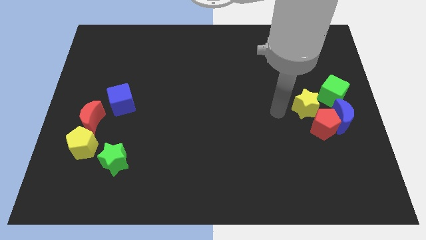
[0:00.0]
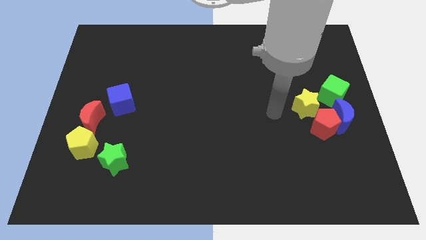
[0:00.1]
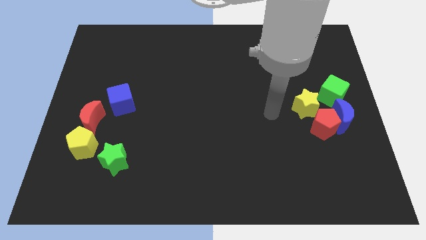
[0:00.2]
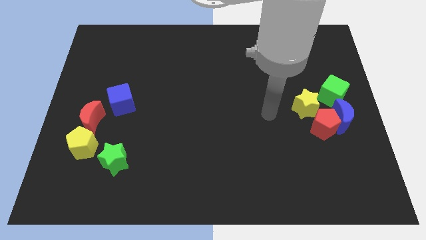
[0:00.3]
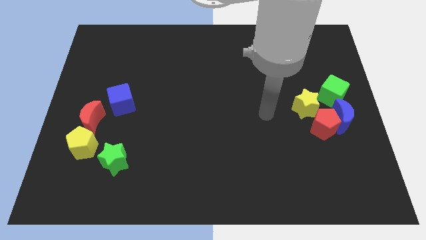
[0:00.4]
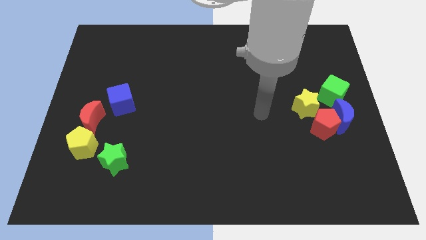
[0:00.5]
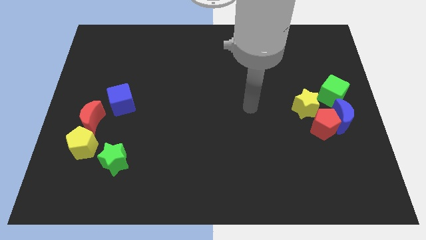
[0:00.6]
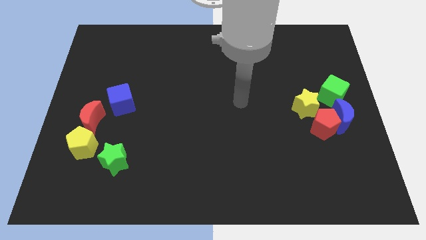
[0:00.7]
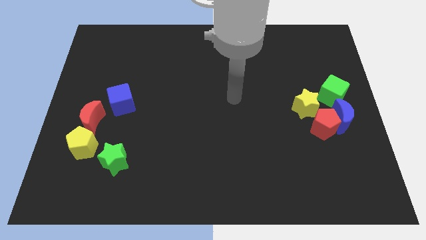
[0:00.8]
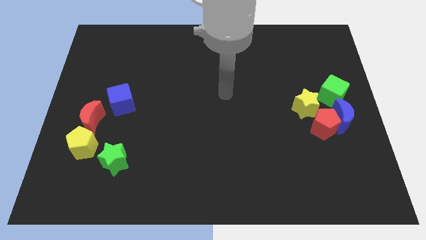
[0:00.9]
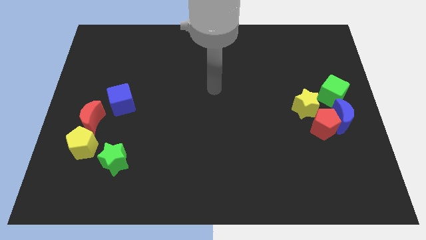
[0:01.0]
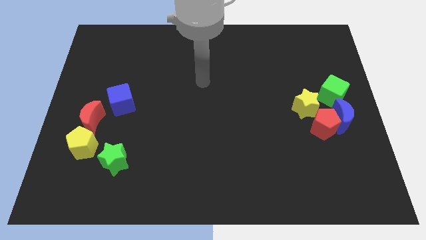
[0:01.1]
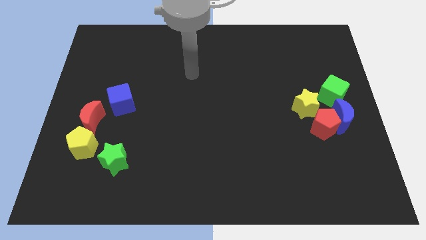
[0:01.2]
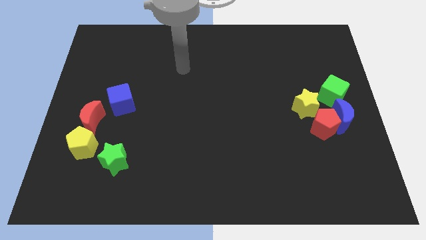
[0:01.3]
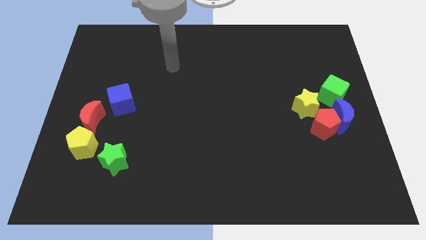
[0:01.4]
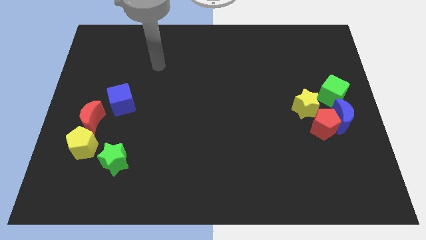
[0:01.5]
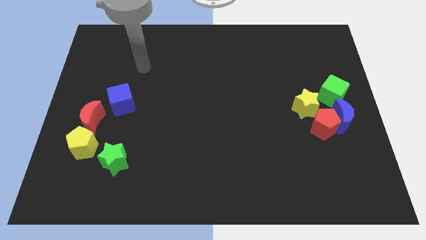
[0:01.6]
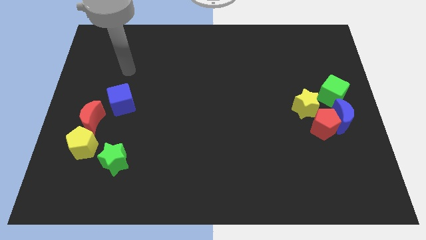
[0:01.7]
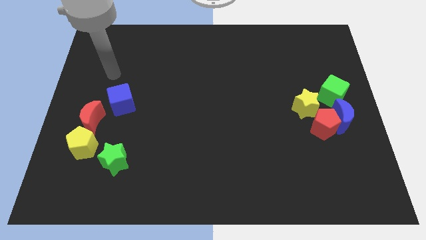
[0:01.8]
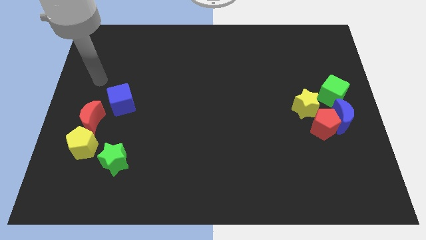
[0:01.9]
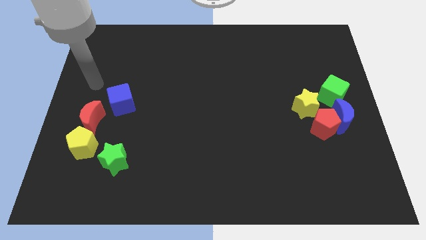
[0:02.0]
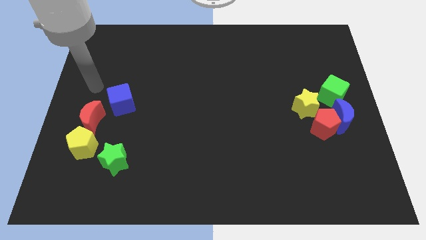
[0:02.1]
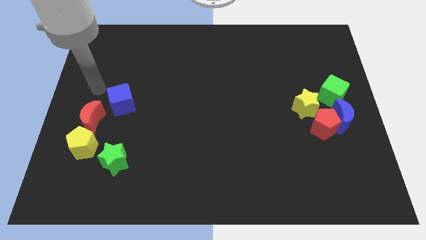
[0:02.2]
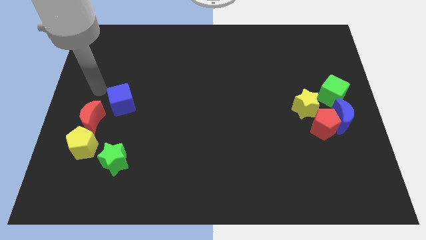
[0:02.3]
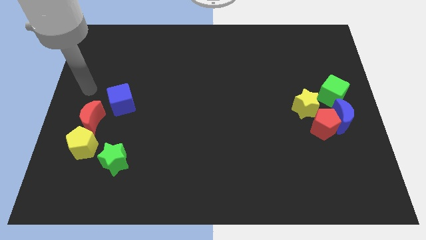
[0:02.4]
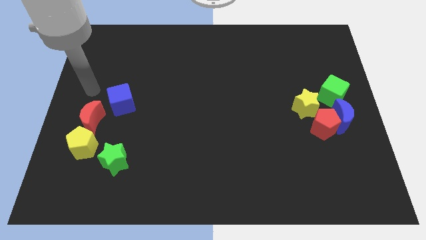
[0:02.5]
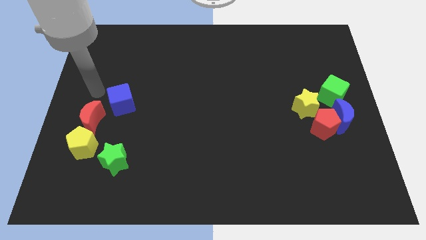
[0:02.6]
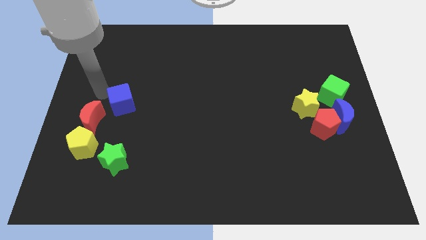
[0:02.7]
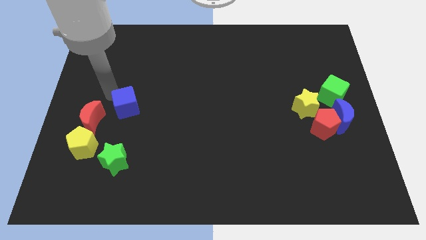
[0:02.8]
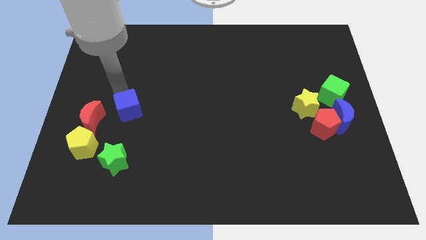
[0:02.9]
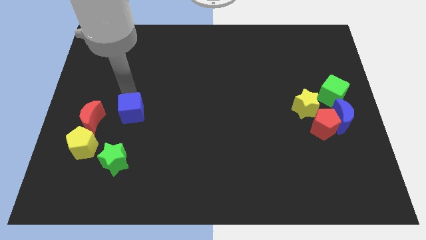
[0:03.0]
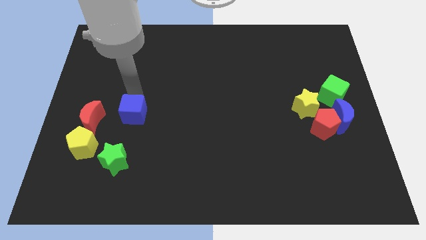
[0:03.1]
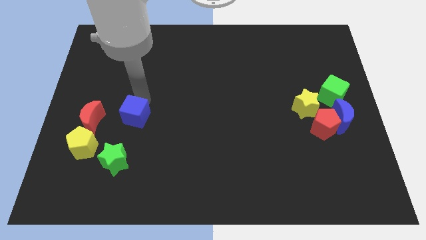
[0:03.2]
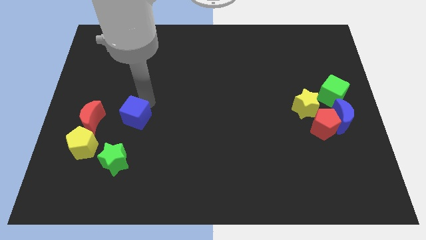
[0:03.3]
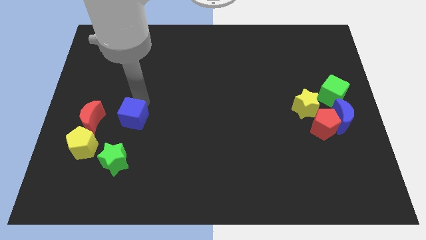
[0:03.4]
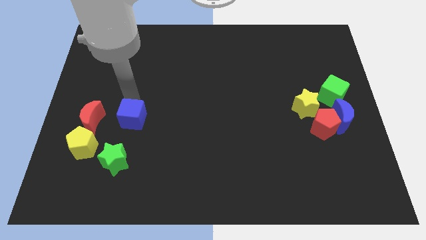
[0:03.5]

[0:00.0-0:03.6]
point your arm beside blue cube

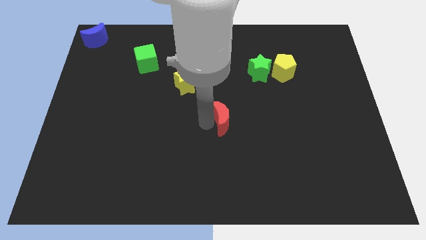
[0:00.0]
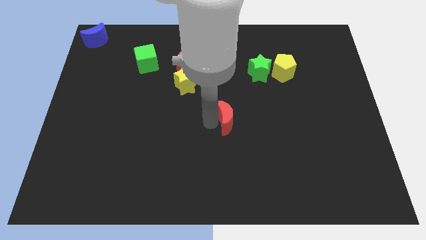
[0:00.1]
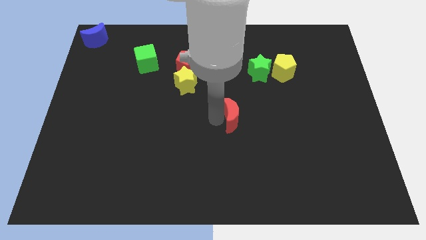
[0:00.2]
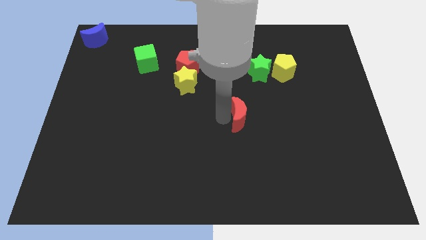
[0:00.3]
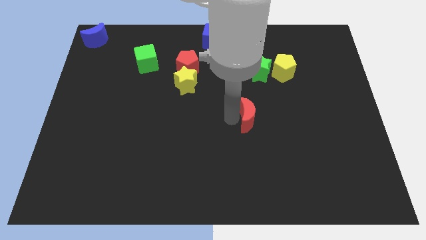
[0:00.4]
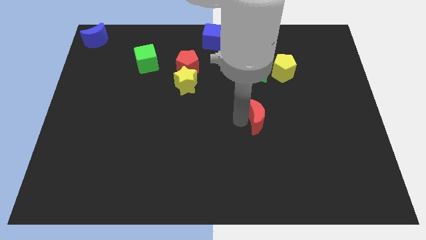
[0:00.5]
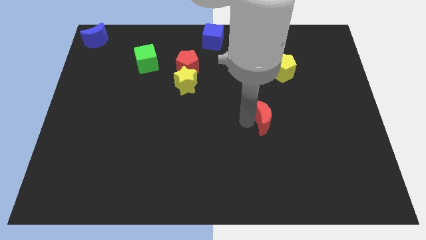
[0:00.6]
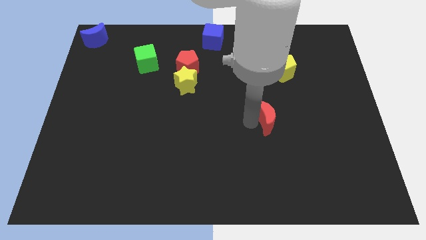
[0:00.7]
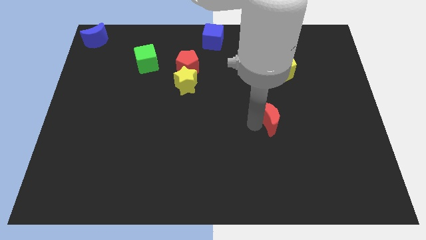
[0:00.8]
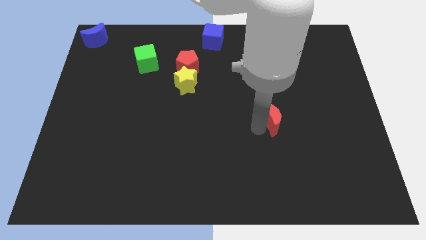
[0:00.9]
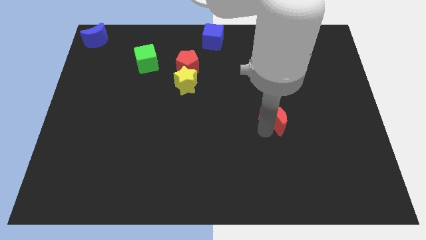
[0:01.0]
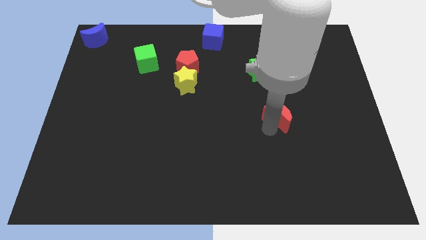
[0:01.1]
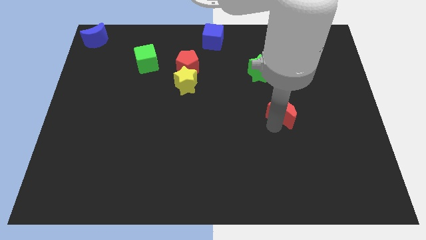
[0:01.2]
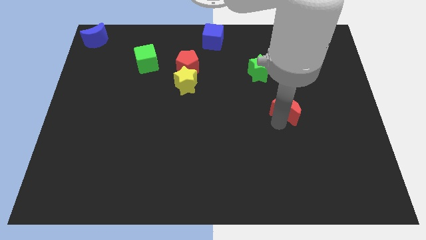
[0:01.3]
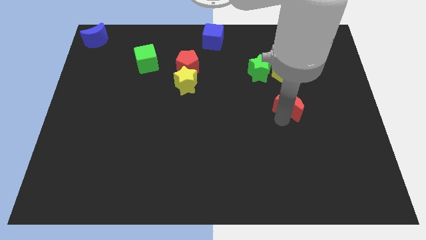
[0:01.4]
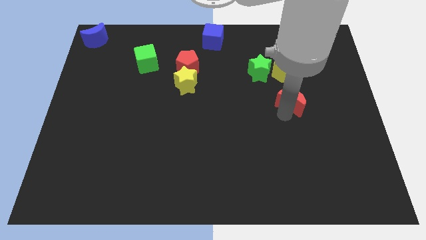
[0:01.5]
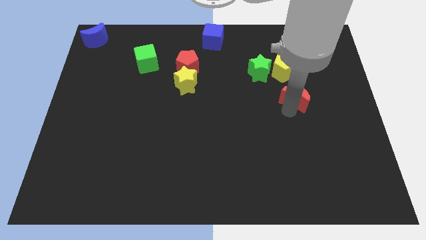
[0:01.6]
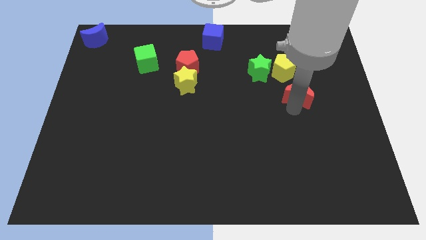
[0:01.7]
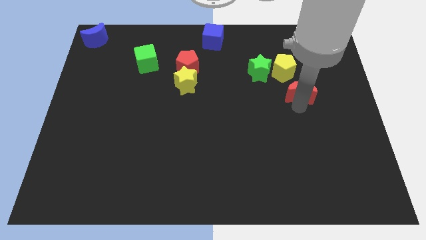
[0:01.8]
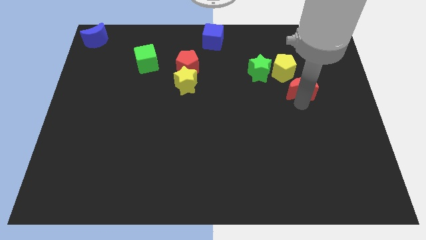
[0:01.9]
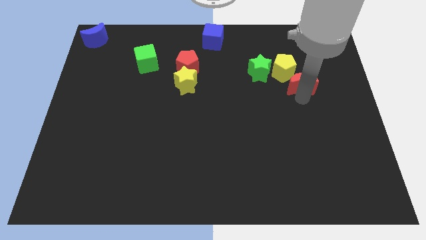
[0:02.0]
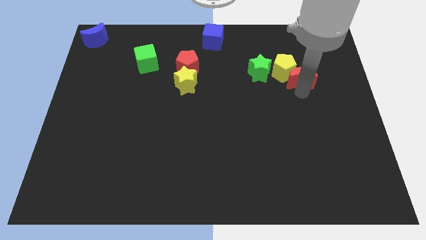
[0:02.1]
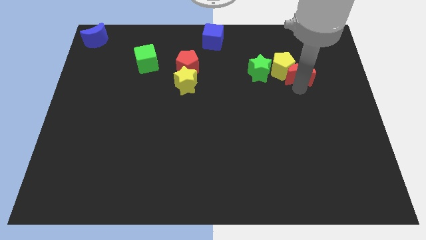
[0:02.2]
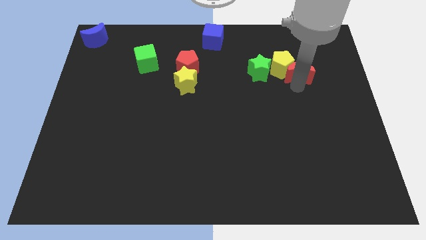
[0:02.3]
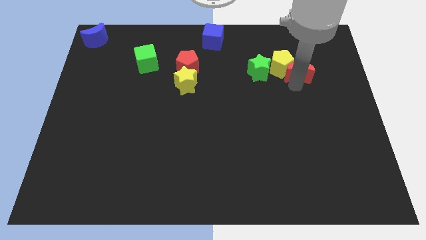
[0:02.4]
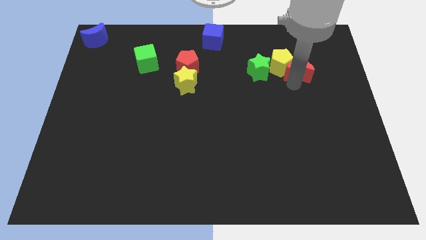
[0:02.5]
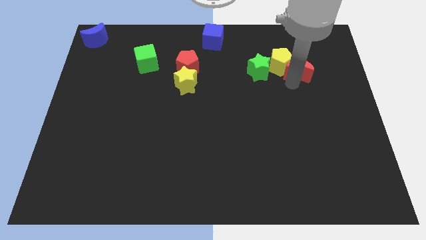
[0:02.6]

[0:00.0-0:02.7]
move the red moon into the yellow pentagon

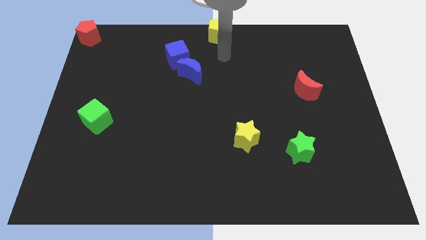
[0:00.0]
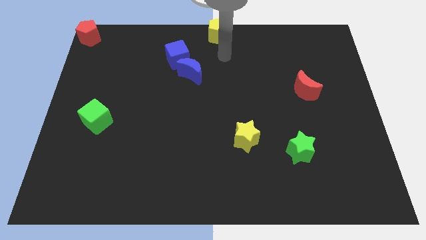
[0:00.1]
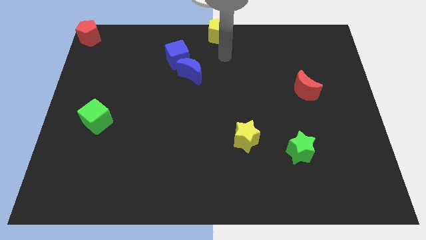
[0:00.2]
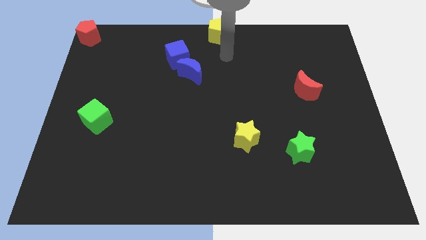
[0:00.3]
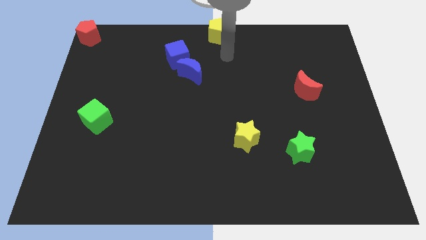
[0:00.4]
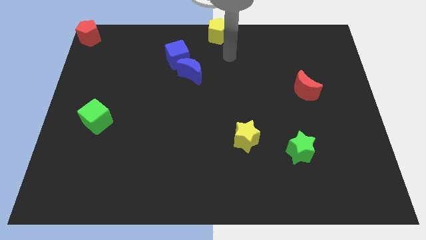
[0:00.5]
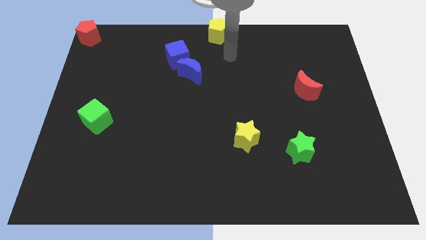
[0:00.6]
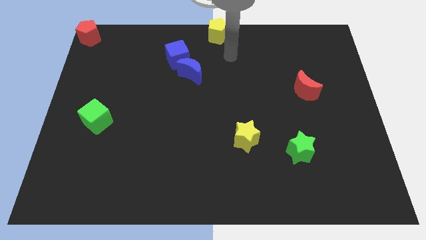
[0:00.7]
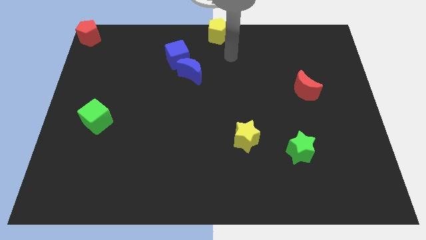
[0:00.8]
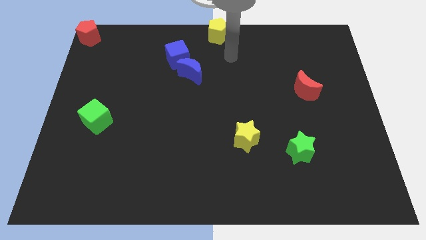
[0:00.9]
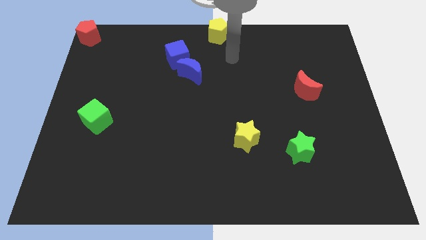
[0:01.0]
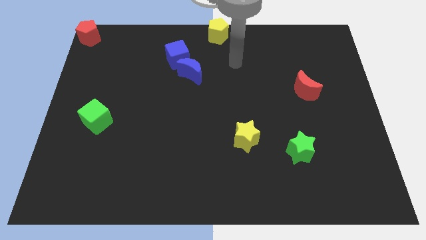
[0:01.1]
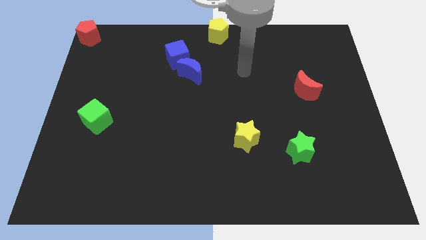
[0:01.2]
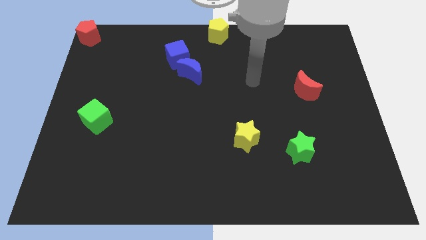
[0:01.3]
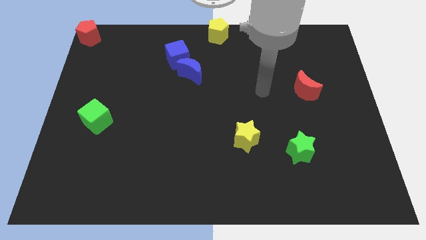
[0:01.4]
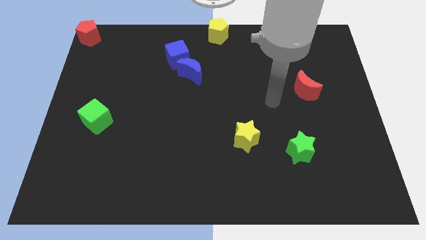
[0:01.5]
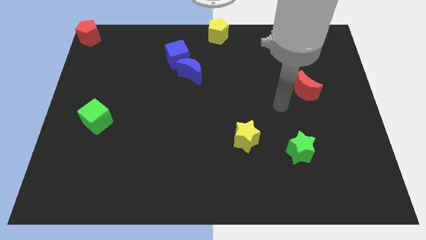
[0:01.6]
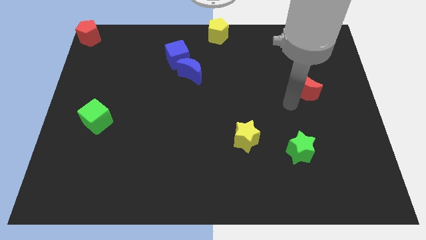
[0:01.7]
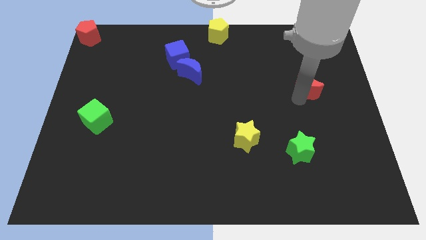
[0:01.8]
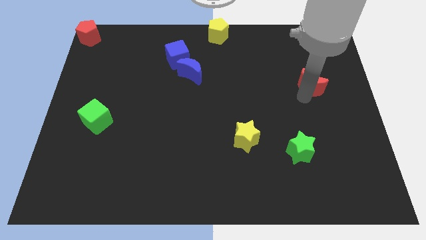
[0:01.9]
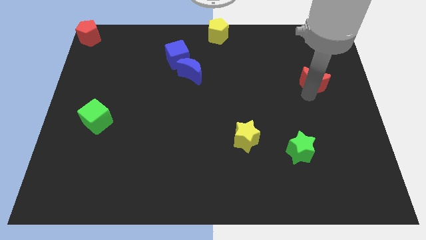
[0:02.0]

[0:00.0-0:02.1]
move the arm towards the red crescent at the right center of the board

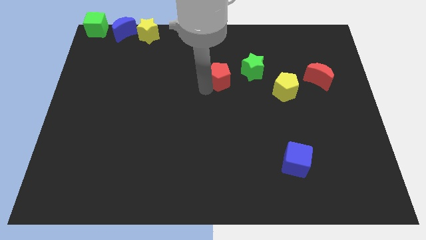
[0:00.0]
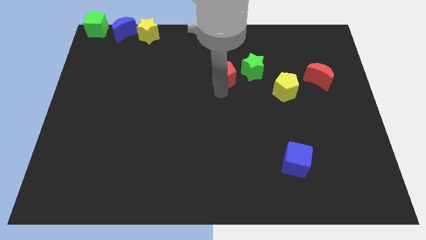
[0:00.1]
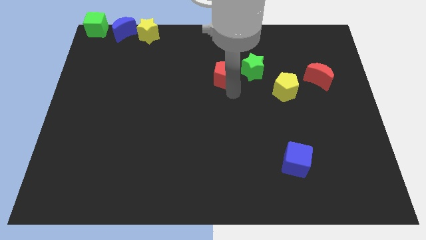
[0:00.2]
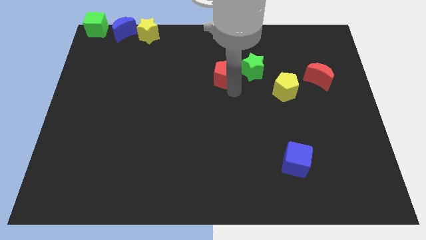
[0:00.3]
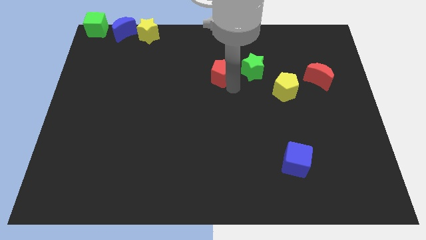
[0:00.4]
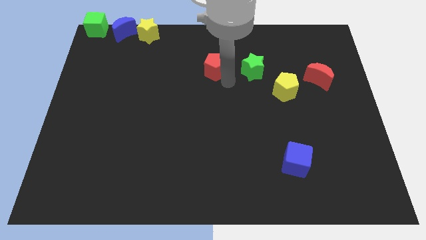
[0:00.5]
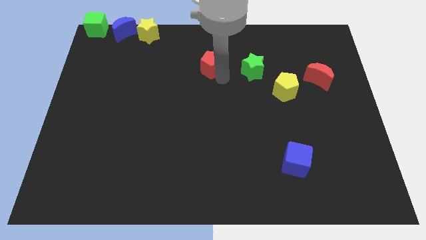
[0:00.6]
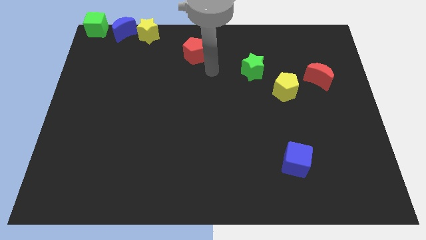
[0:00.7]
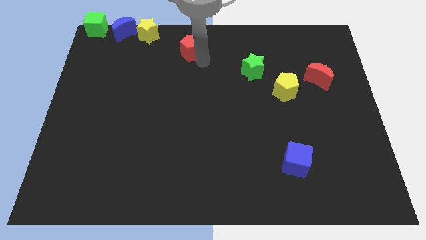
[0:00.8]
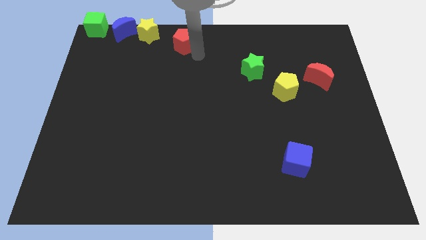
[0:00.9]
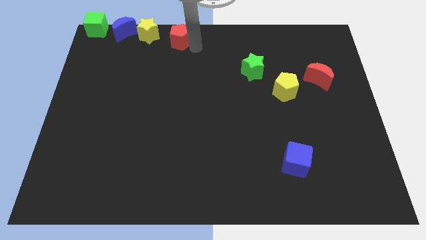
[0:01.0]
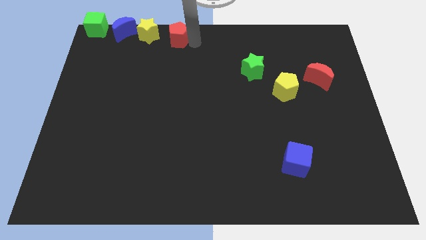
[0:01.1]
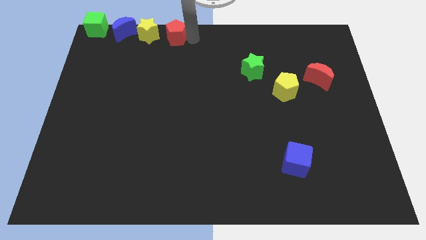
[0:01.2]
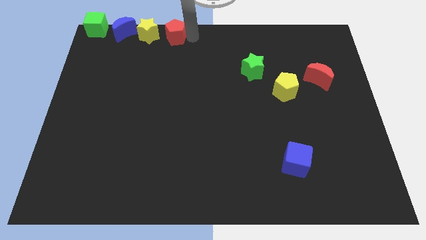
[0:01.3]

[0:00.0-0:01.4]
place the red pentagon to the right of the yellow star
